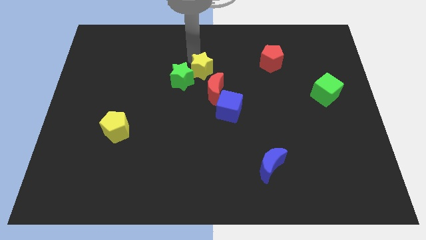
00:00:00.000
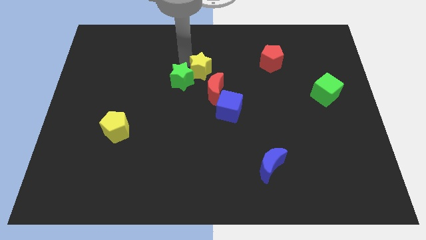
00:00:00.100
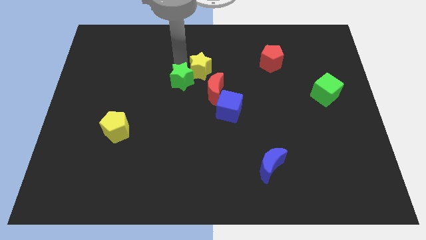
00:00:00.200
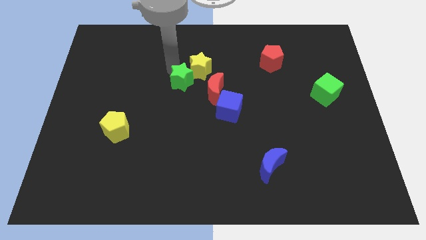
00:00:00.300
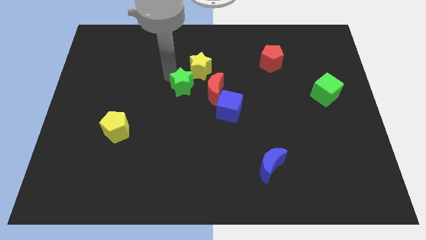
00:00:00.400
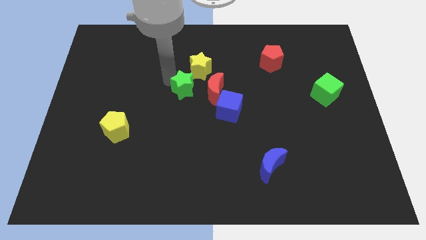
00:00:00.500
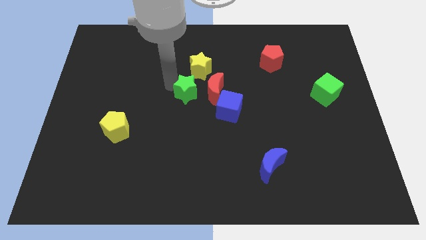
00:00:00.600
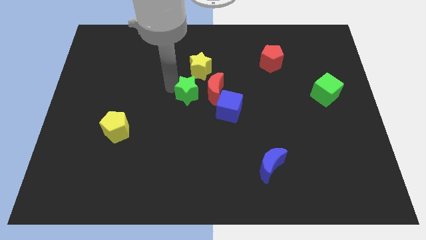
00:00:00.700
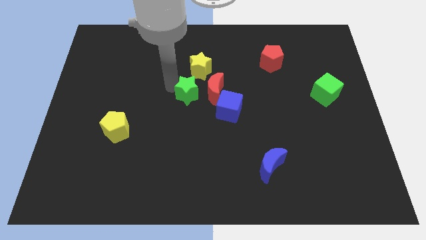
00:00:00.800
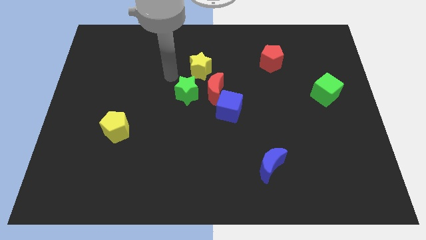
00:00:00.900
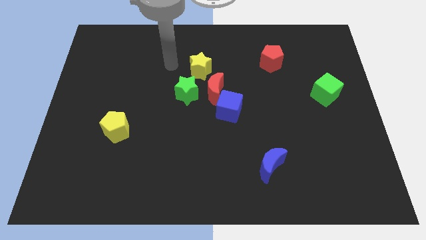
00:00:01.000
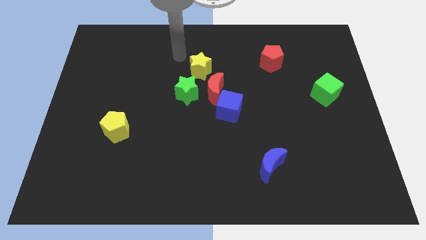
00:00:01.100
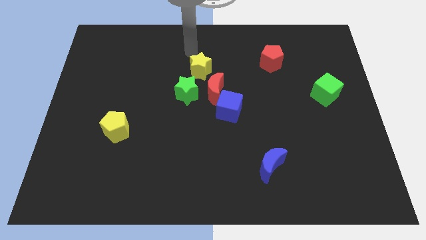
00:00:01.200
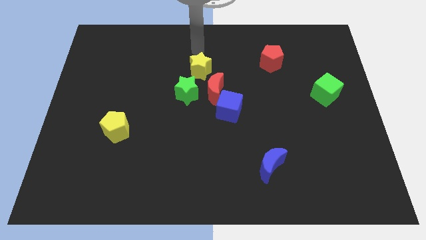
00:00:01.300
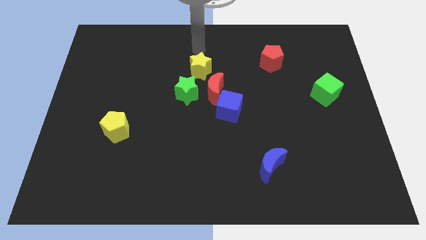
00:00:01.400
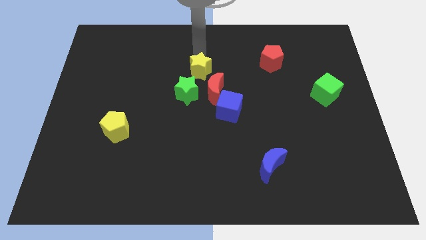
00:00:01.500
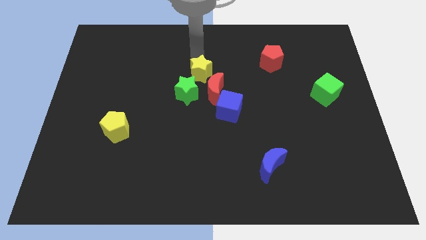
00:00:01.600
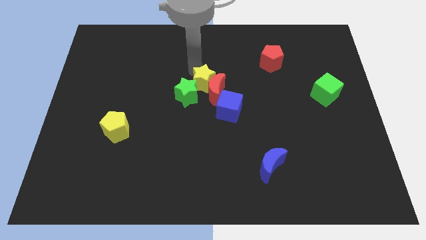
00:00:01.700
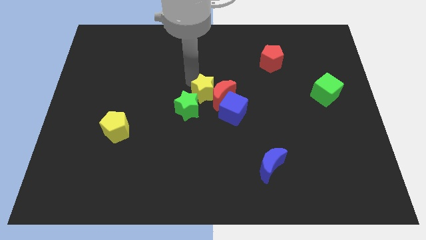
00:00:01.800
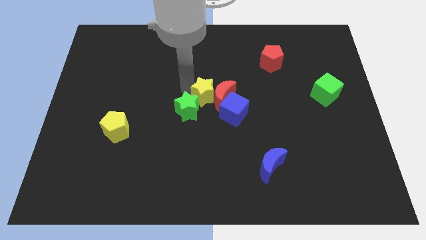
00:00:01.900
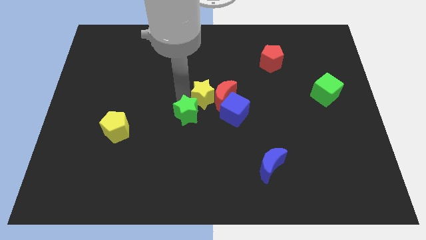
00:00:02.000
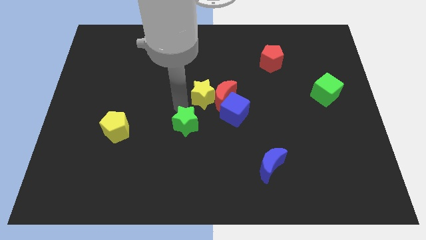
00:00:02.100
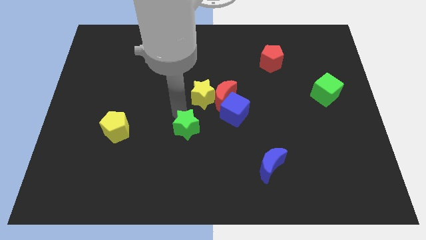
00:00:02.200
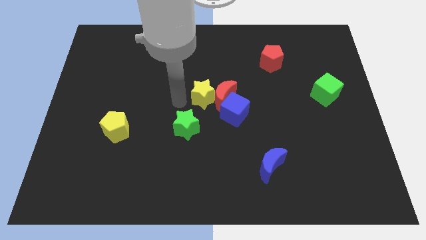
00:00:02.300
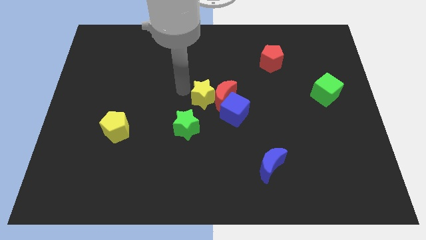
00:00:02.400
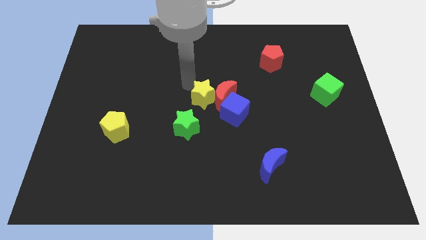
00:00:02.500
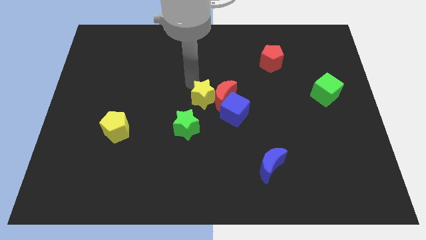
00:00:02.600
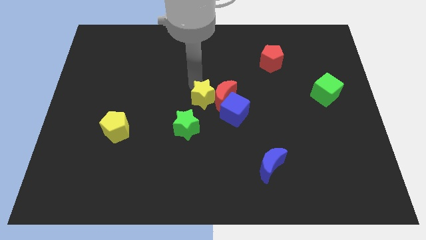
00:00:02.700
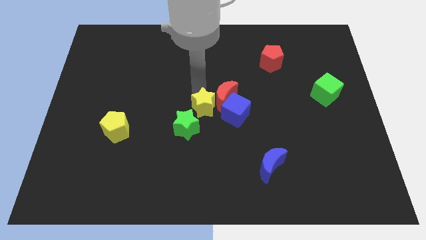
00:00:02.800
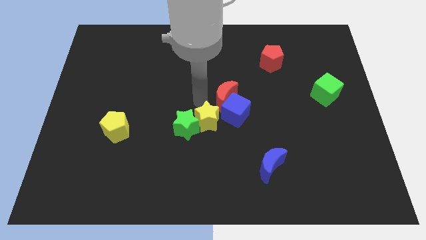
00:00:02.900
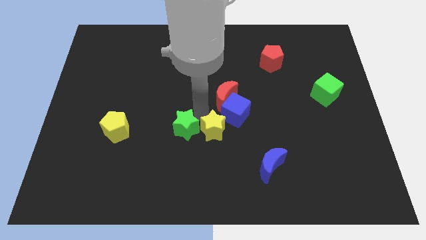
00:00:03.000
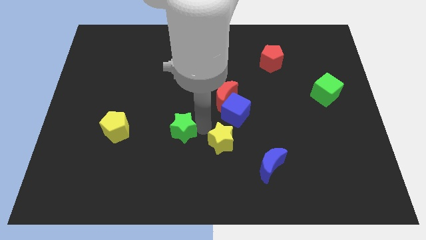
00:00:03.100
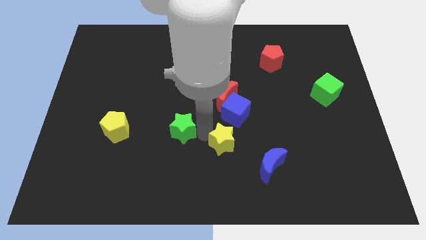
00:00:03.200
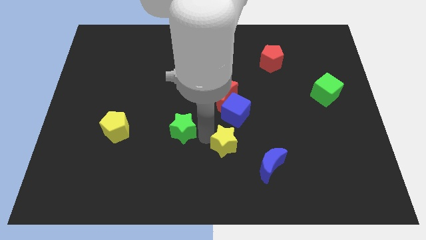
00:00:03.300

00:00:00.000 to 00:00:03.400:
place yellow star diagonal to the blue cube

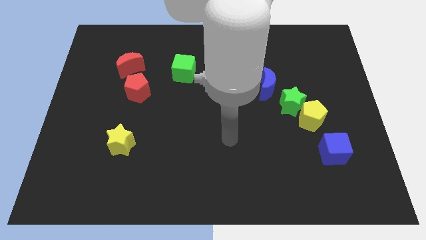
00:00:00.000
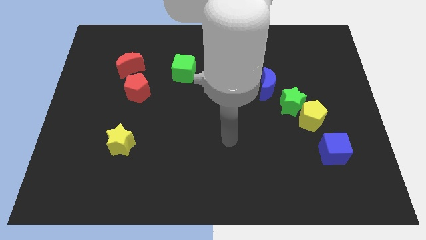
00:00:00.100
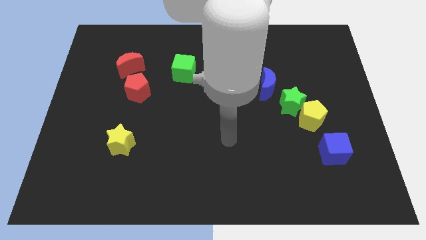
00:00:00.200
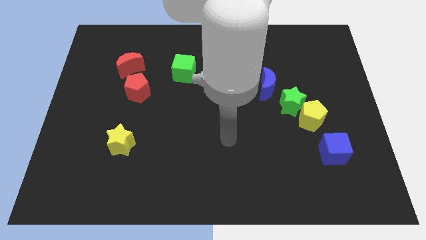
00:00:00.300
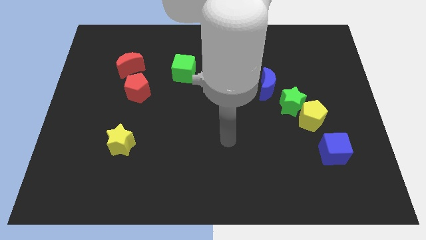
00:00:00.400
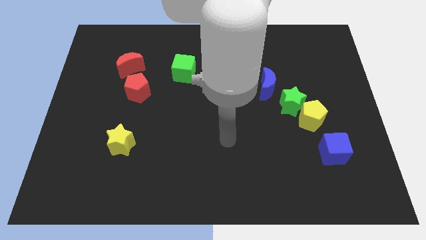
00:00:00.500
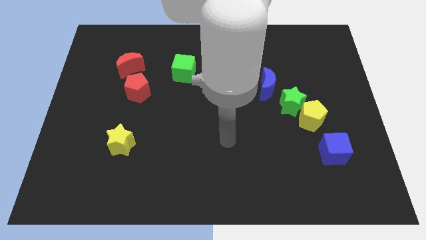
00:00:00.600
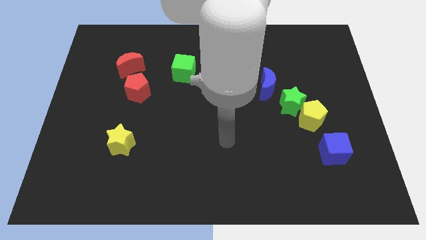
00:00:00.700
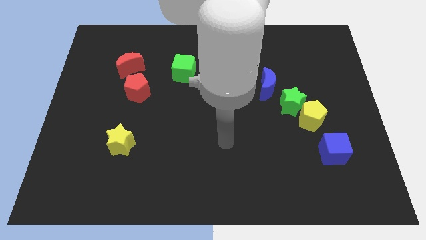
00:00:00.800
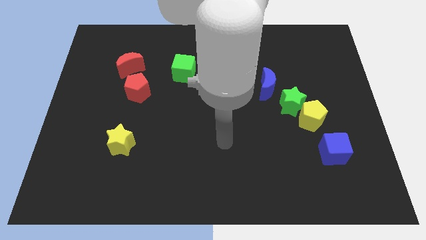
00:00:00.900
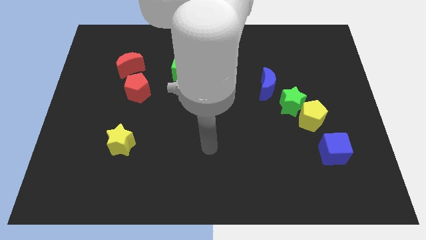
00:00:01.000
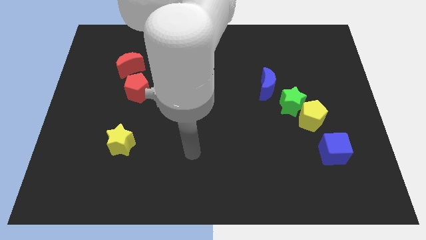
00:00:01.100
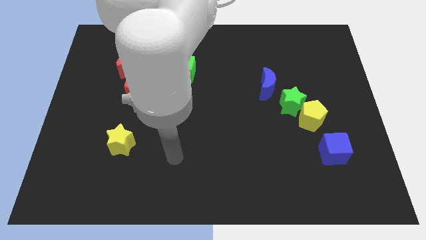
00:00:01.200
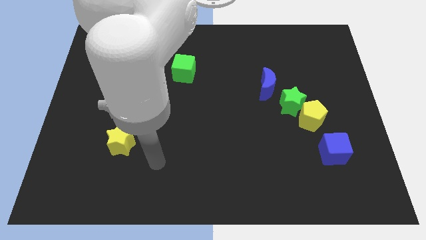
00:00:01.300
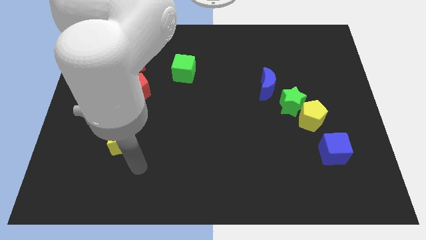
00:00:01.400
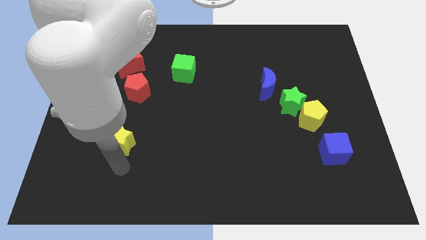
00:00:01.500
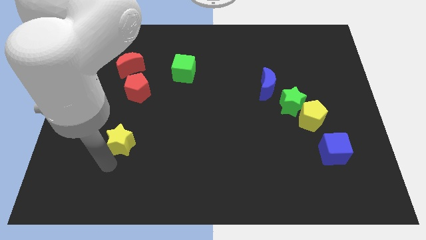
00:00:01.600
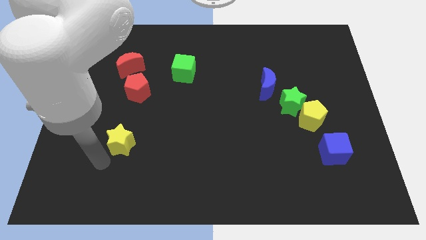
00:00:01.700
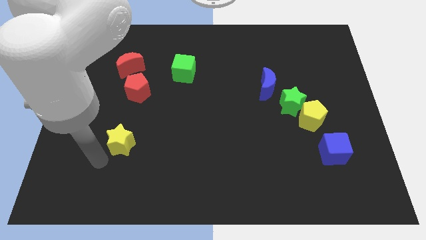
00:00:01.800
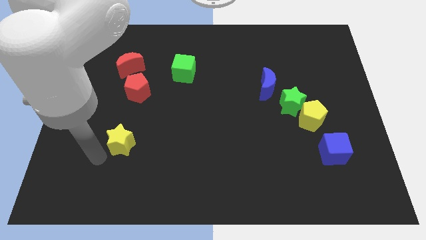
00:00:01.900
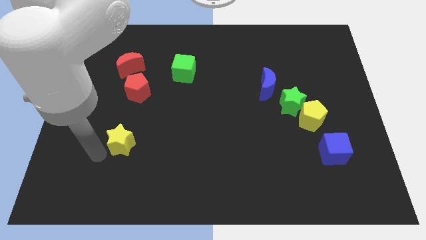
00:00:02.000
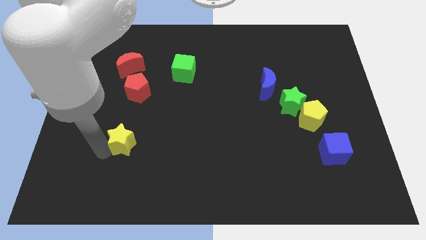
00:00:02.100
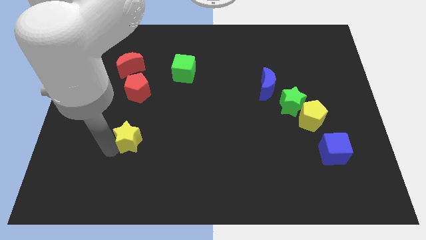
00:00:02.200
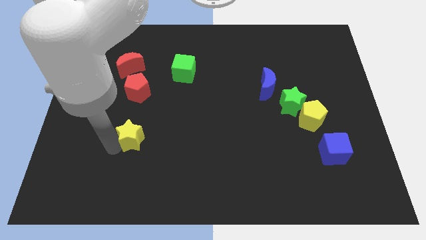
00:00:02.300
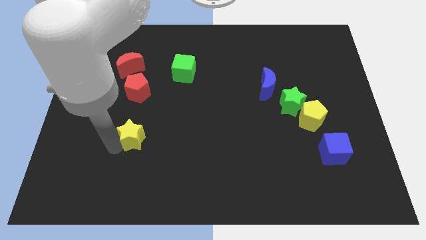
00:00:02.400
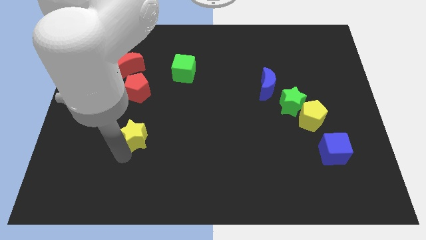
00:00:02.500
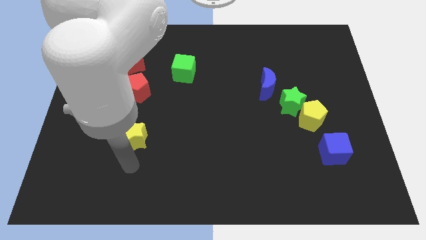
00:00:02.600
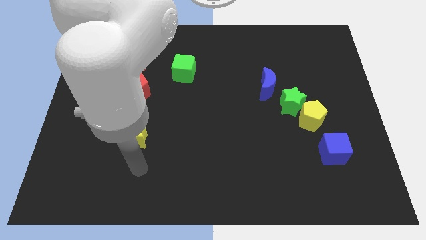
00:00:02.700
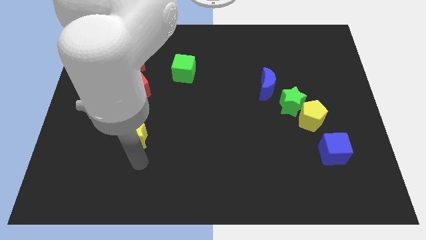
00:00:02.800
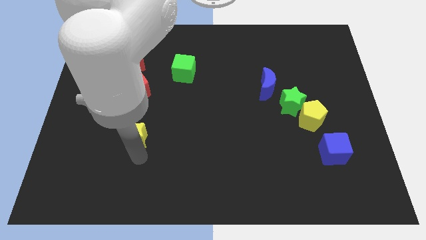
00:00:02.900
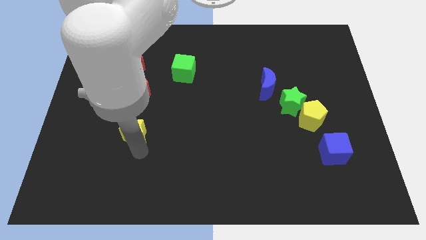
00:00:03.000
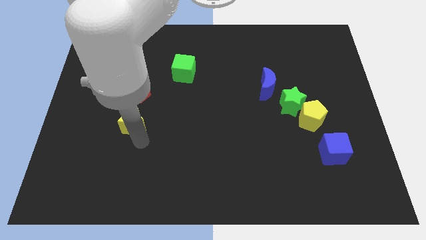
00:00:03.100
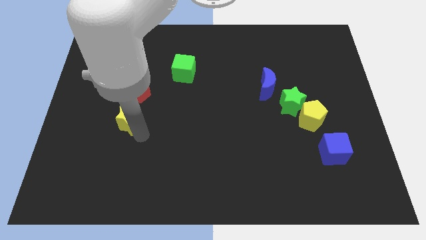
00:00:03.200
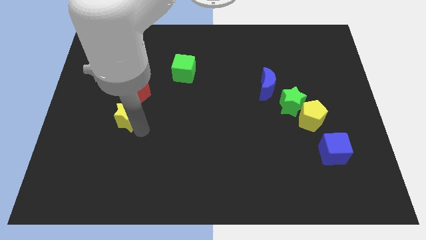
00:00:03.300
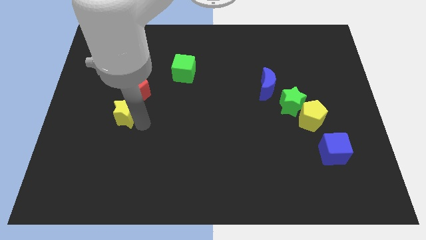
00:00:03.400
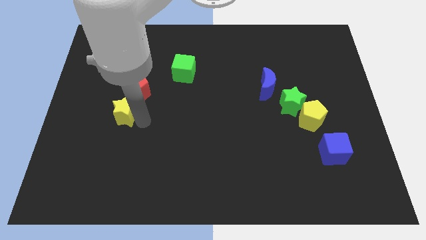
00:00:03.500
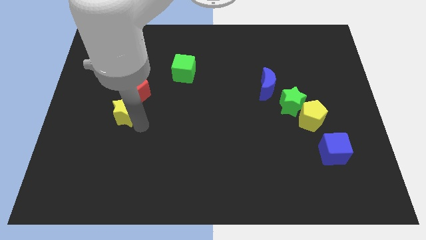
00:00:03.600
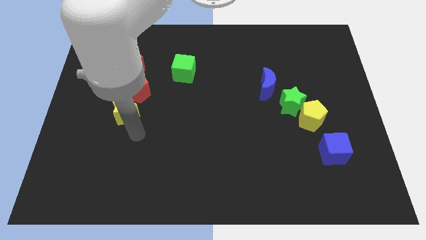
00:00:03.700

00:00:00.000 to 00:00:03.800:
move the yellow star close to the red pentagon

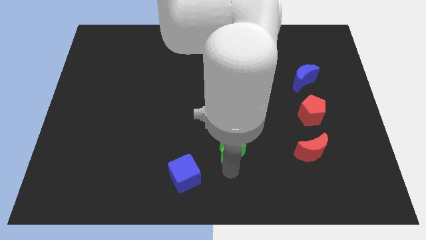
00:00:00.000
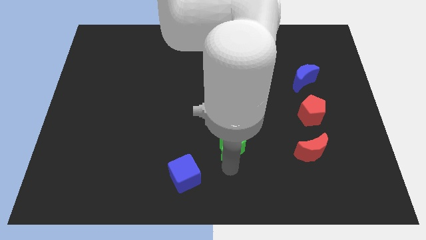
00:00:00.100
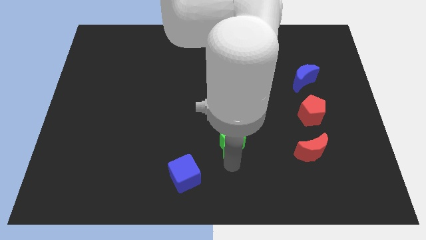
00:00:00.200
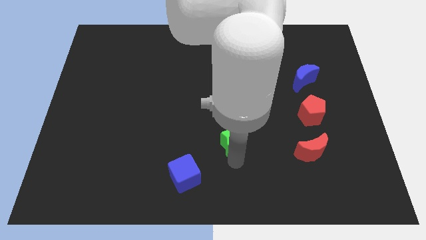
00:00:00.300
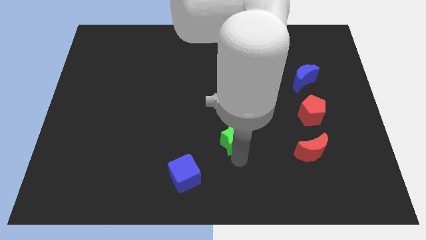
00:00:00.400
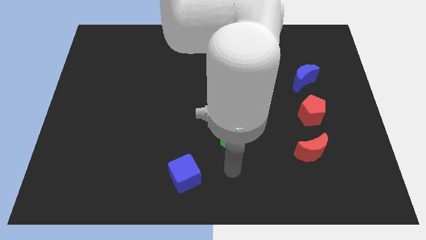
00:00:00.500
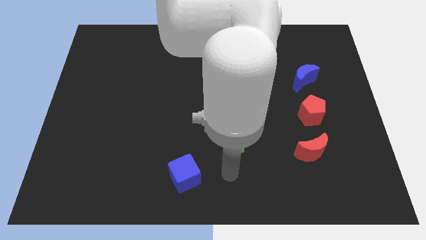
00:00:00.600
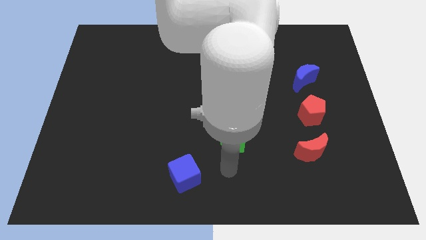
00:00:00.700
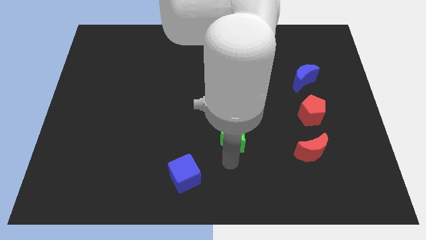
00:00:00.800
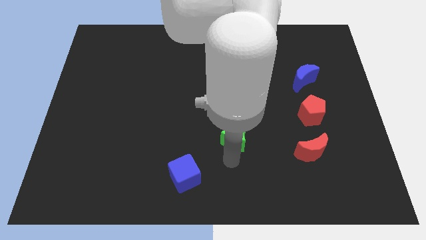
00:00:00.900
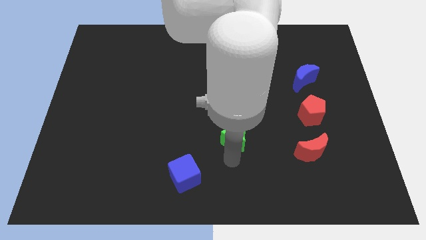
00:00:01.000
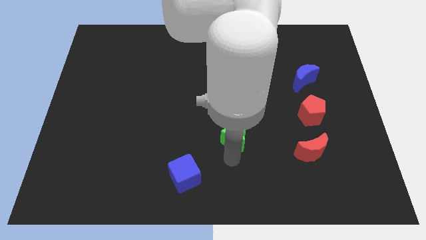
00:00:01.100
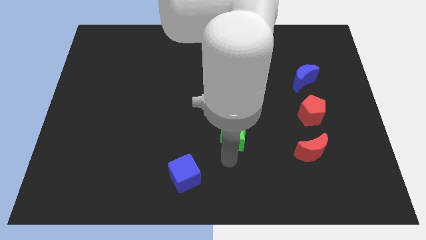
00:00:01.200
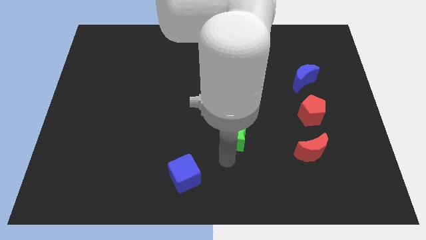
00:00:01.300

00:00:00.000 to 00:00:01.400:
place the green star to the bottom of green cube

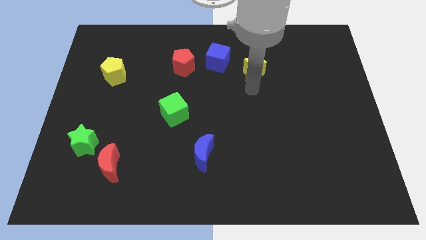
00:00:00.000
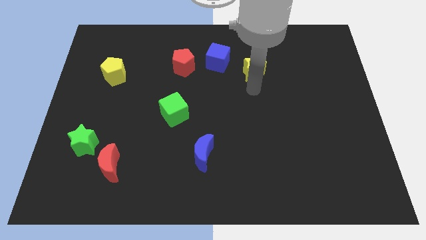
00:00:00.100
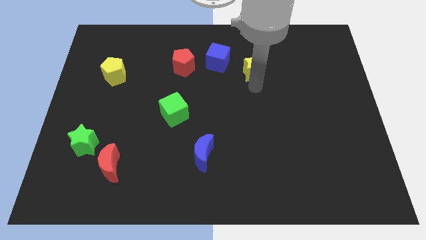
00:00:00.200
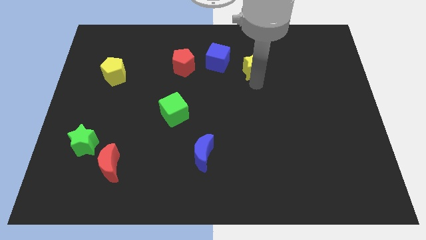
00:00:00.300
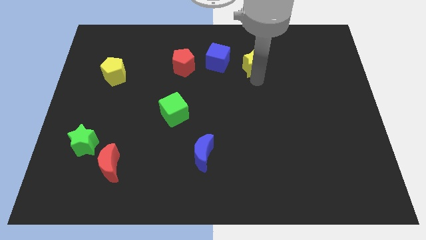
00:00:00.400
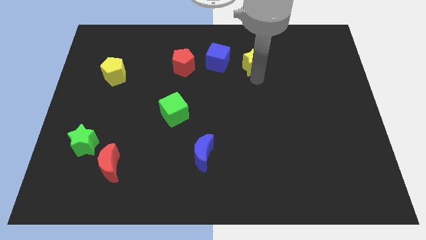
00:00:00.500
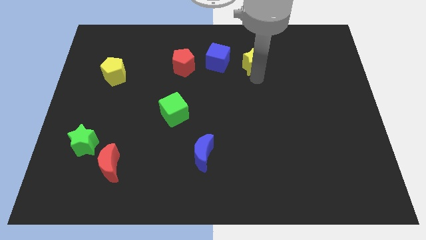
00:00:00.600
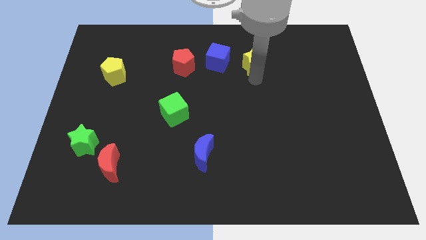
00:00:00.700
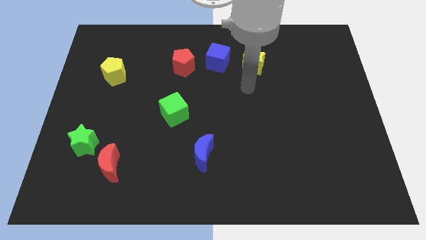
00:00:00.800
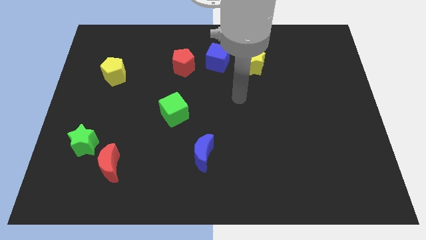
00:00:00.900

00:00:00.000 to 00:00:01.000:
put yellow star parallel right to blue cube
